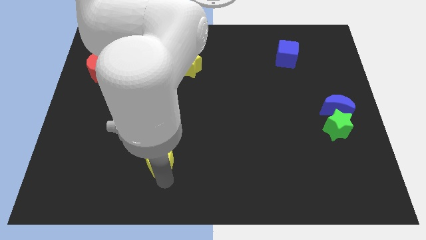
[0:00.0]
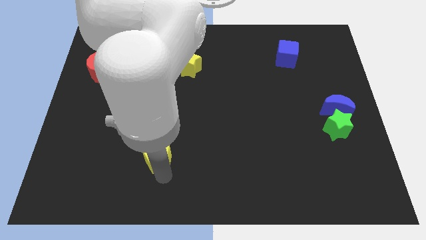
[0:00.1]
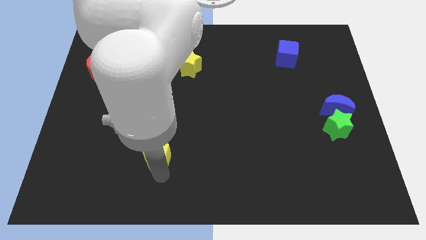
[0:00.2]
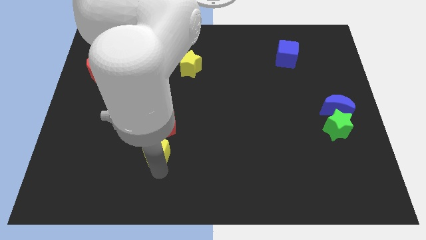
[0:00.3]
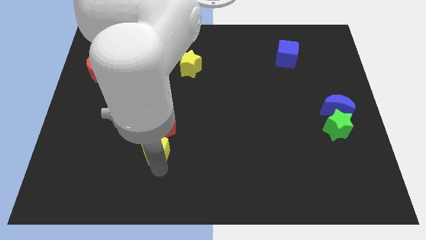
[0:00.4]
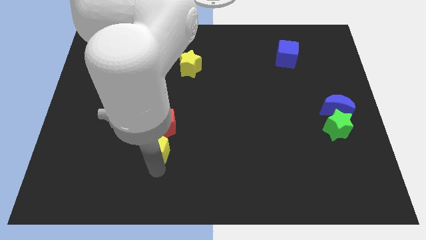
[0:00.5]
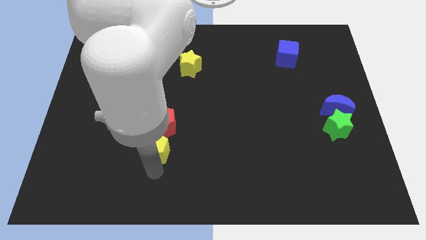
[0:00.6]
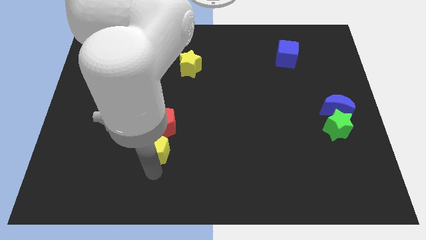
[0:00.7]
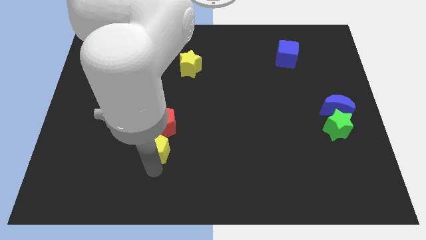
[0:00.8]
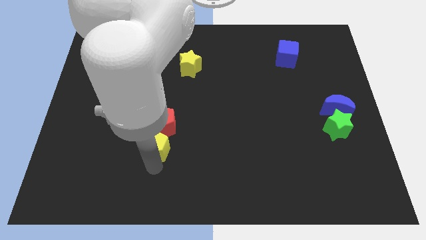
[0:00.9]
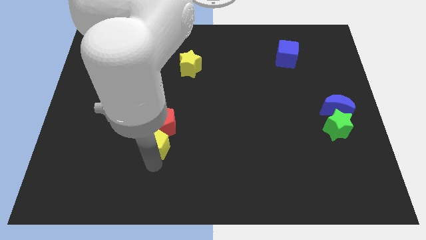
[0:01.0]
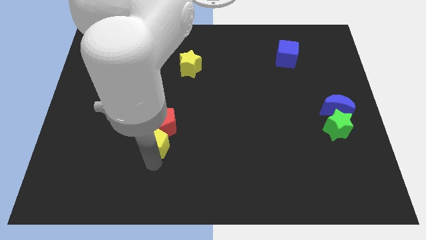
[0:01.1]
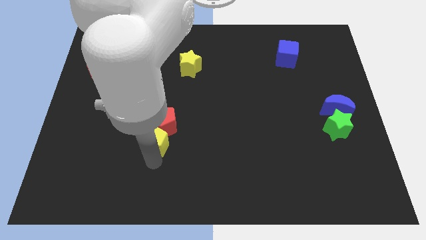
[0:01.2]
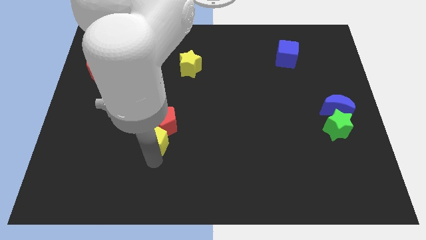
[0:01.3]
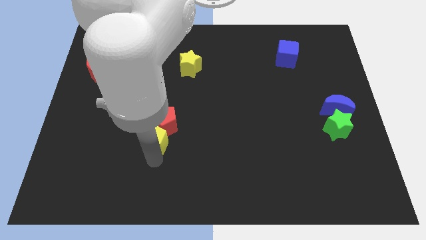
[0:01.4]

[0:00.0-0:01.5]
push the yellow pentagon into red pentagon

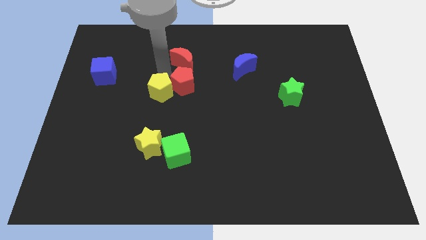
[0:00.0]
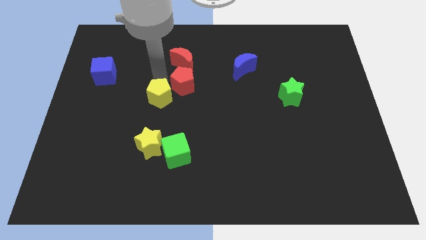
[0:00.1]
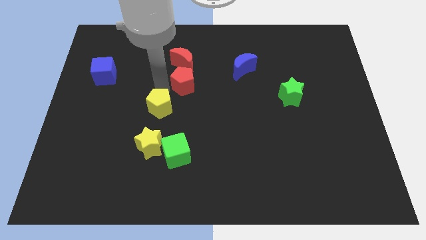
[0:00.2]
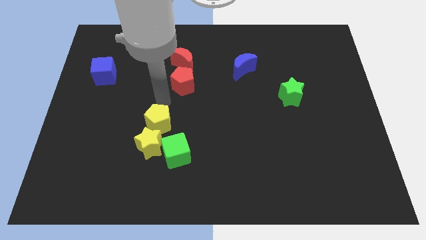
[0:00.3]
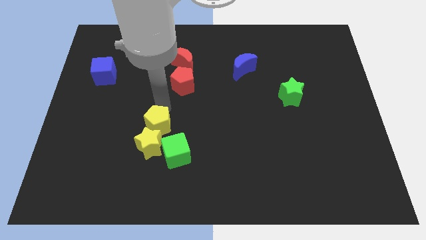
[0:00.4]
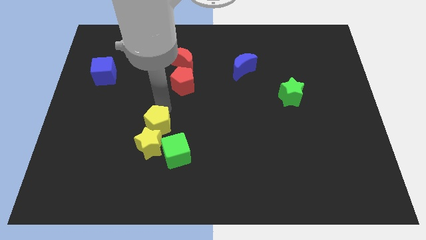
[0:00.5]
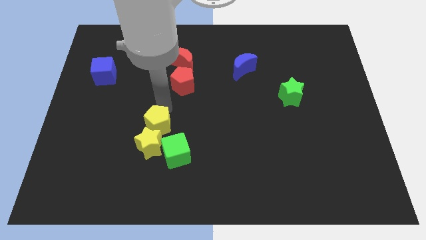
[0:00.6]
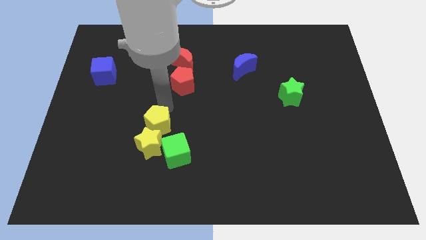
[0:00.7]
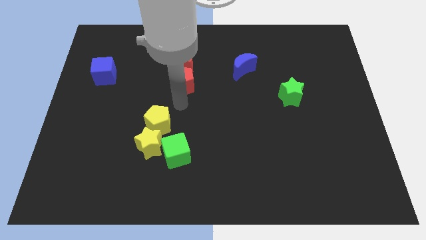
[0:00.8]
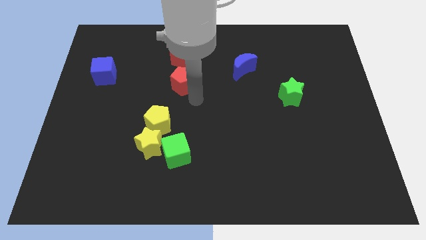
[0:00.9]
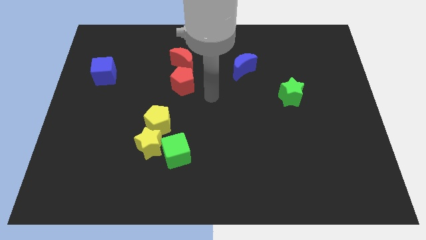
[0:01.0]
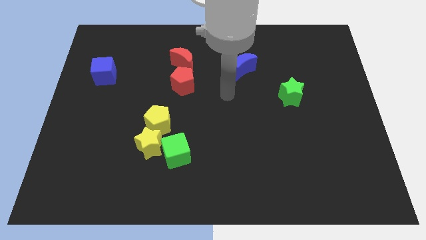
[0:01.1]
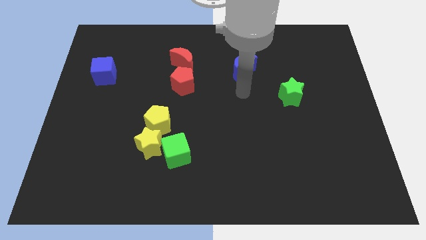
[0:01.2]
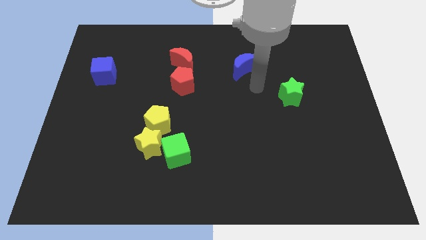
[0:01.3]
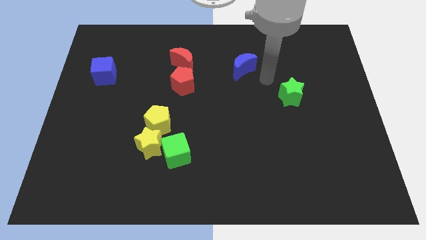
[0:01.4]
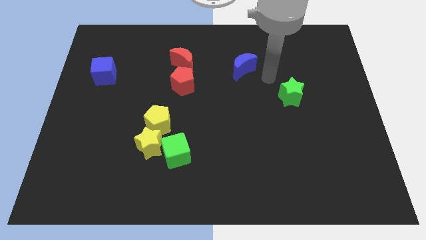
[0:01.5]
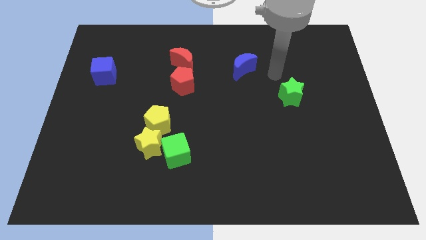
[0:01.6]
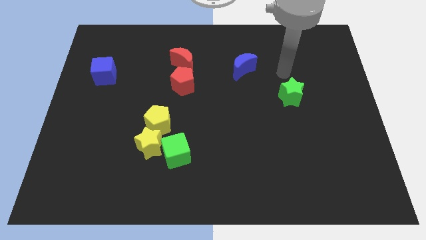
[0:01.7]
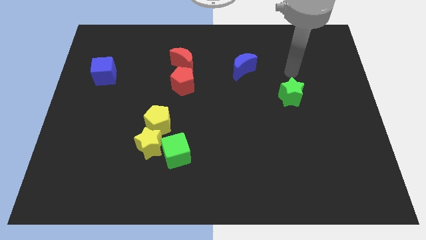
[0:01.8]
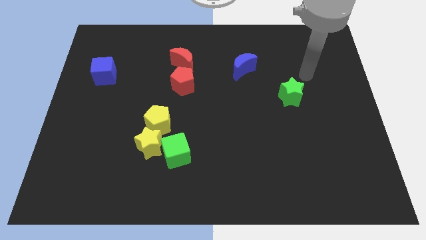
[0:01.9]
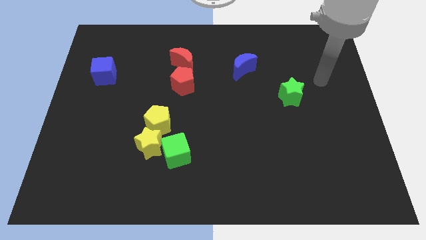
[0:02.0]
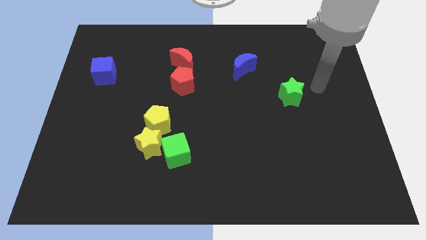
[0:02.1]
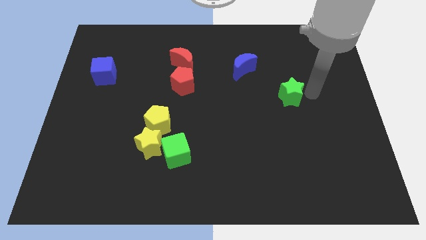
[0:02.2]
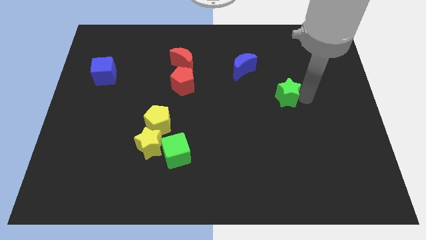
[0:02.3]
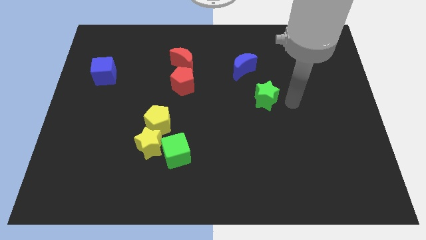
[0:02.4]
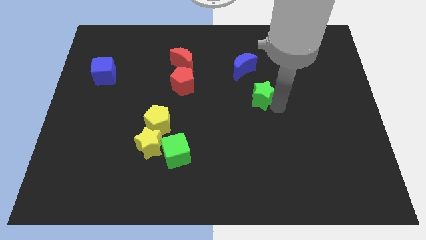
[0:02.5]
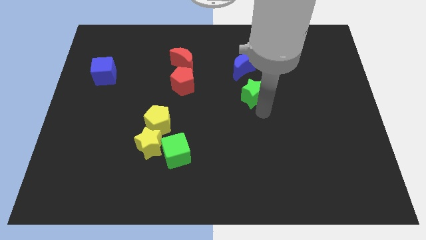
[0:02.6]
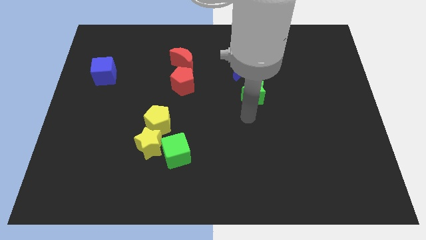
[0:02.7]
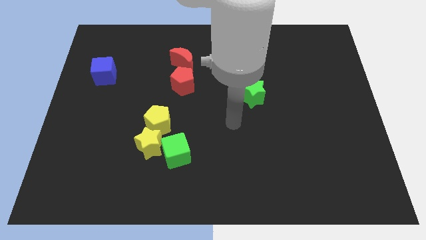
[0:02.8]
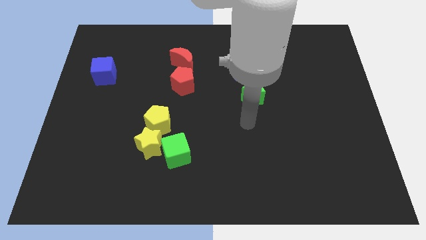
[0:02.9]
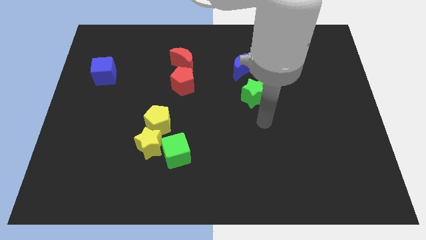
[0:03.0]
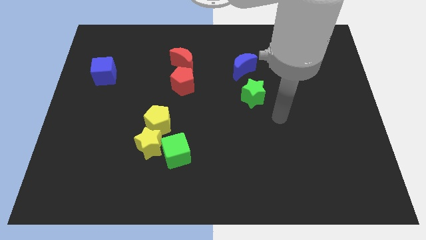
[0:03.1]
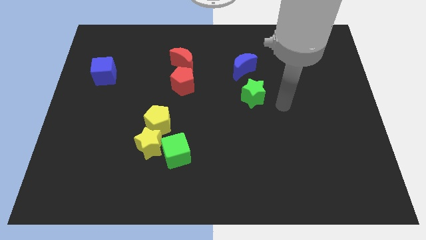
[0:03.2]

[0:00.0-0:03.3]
push green star below blue crescent

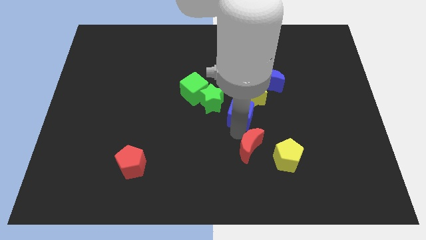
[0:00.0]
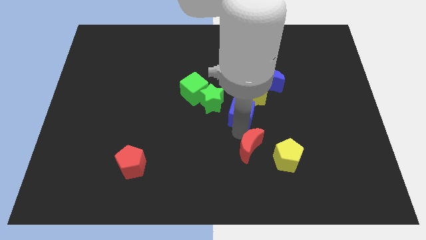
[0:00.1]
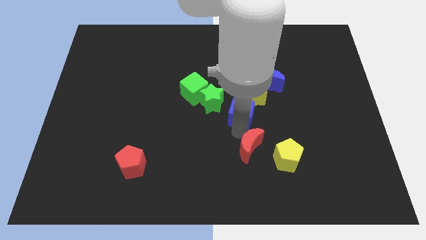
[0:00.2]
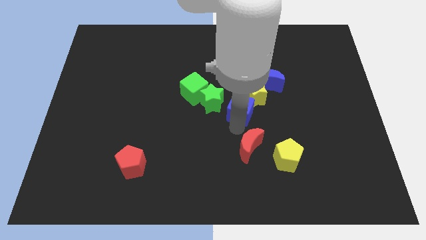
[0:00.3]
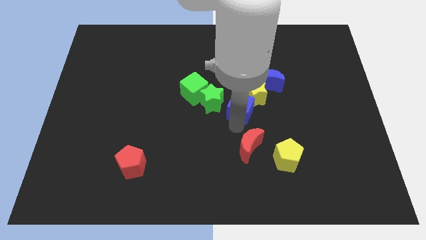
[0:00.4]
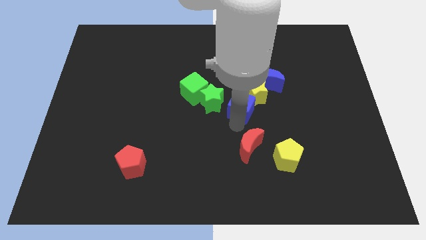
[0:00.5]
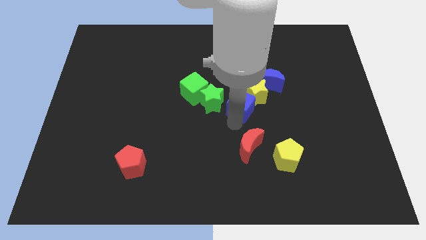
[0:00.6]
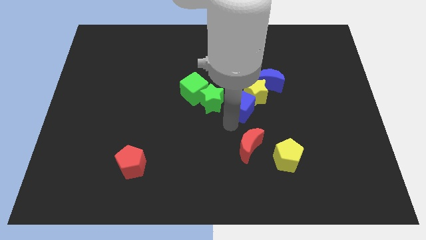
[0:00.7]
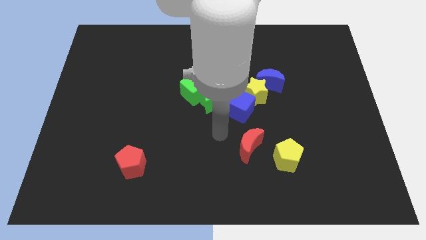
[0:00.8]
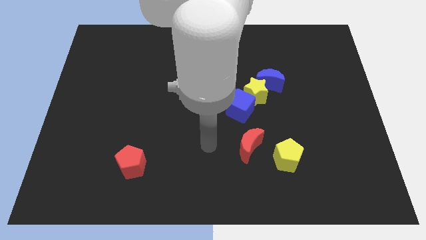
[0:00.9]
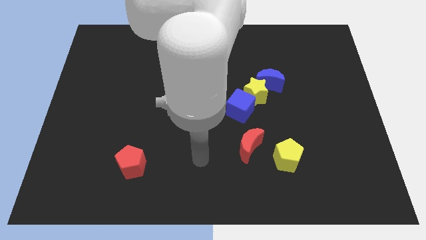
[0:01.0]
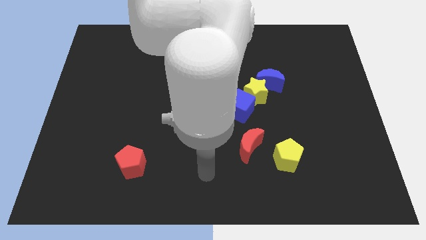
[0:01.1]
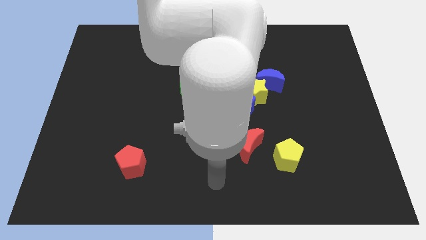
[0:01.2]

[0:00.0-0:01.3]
push blue cube into the yellow star

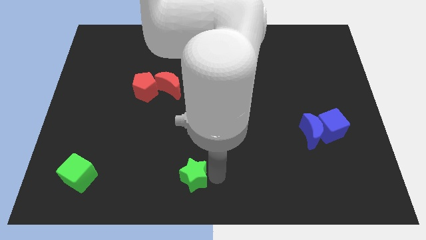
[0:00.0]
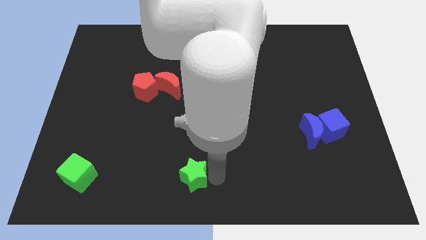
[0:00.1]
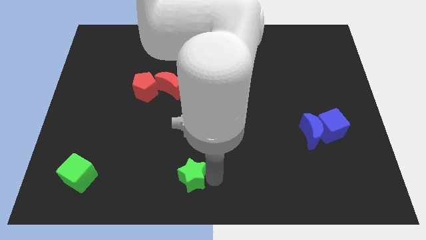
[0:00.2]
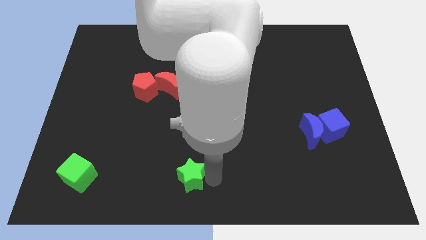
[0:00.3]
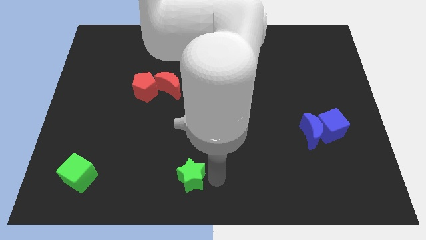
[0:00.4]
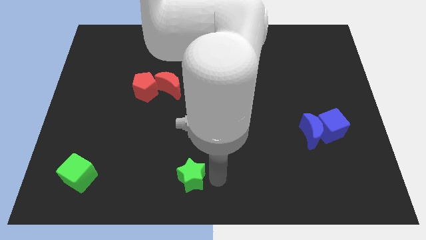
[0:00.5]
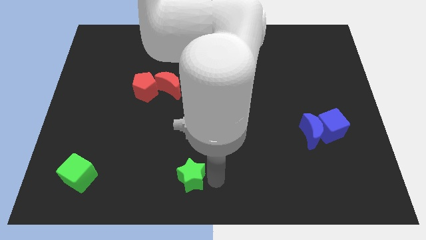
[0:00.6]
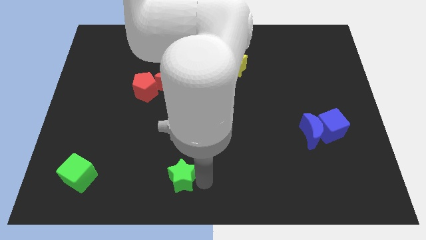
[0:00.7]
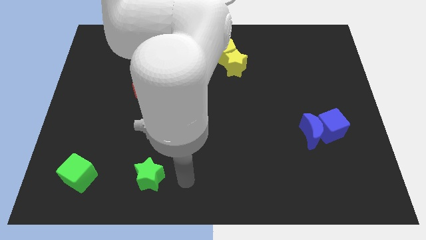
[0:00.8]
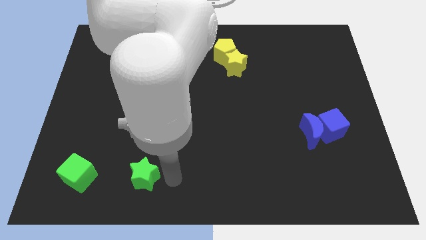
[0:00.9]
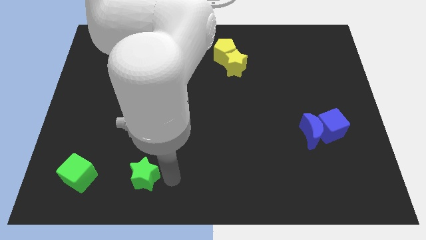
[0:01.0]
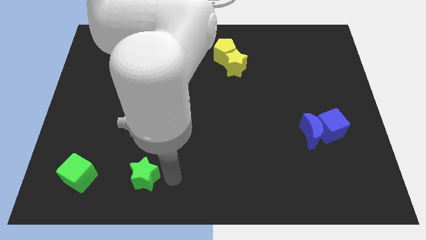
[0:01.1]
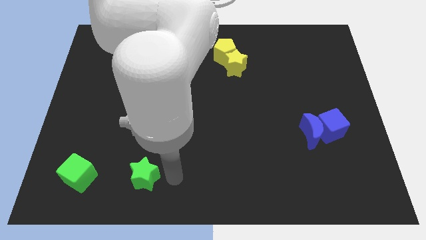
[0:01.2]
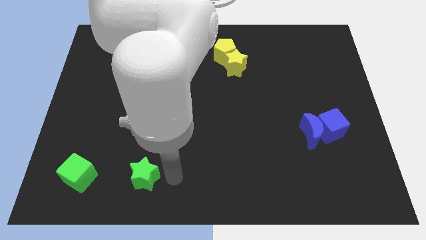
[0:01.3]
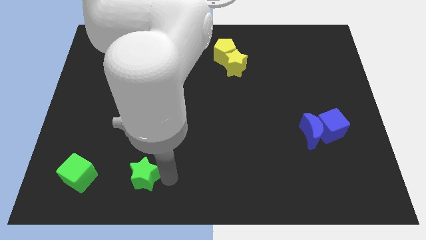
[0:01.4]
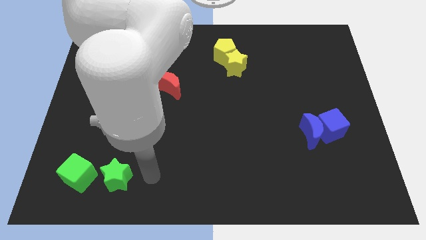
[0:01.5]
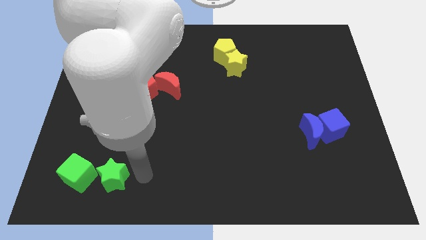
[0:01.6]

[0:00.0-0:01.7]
place the green star right to the green cube

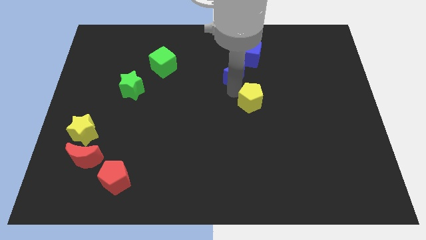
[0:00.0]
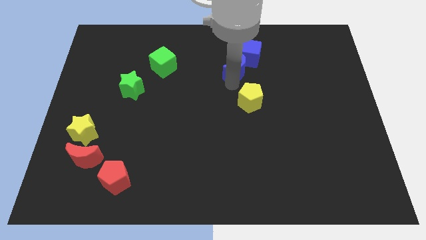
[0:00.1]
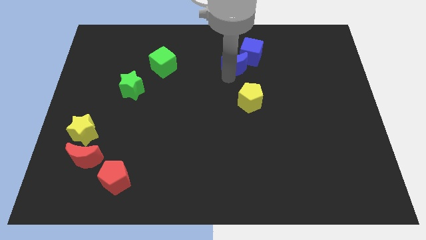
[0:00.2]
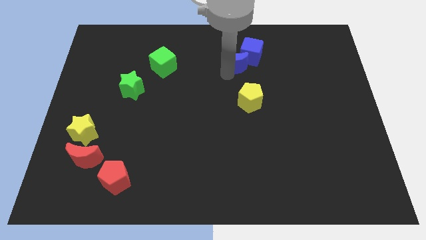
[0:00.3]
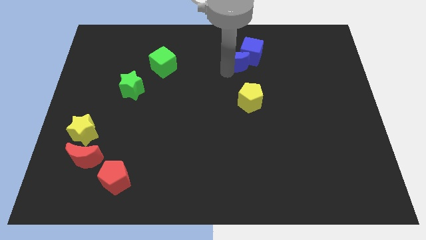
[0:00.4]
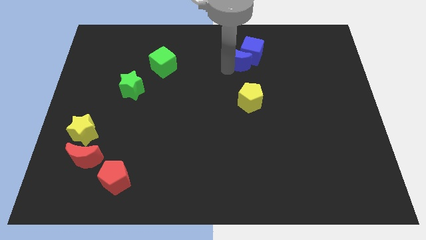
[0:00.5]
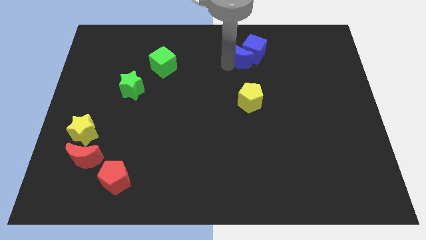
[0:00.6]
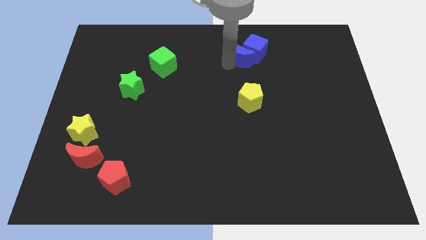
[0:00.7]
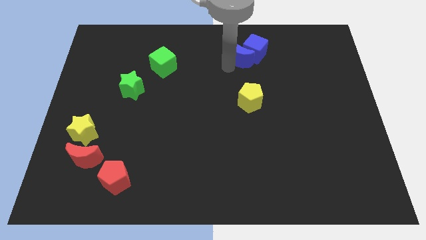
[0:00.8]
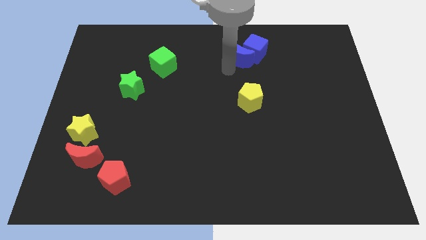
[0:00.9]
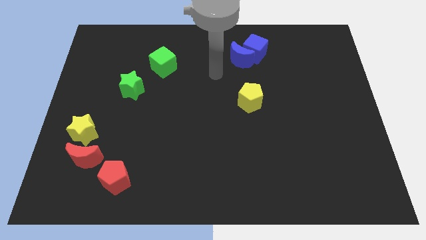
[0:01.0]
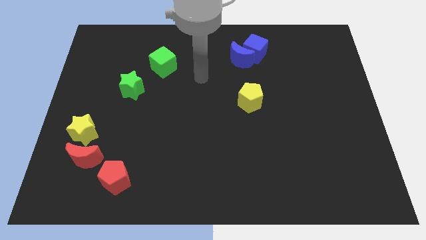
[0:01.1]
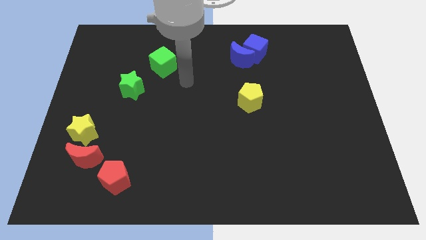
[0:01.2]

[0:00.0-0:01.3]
move blue moon into blue cube
